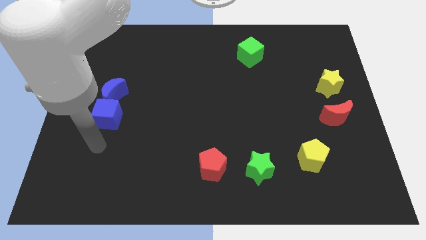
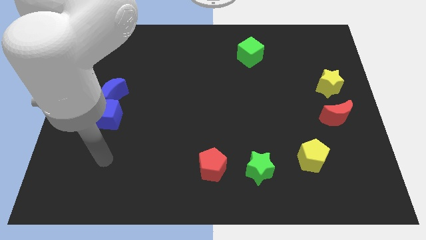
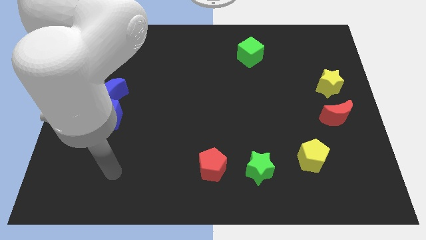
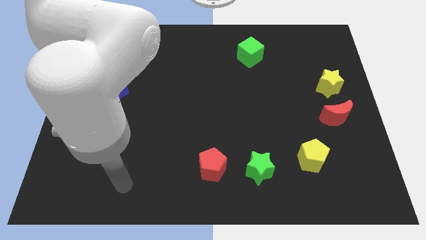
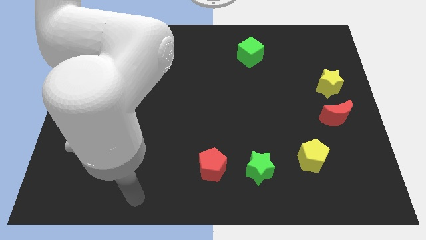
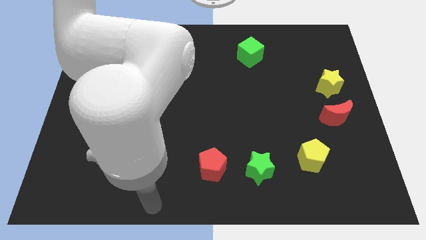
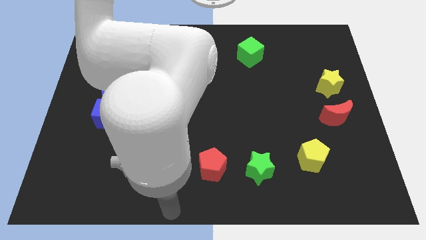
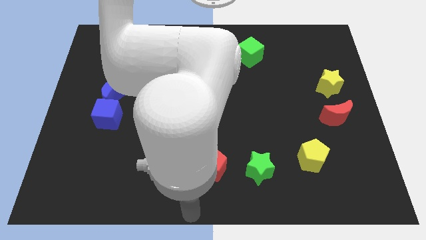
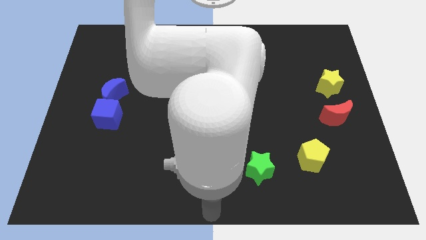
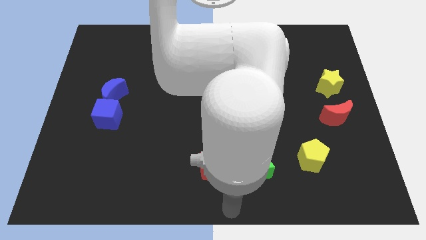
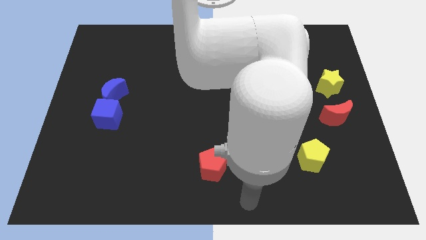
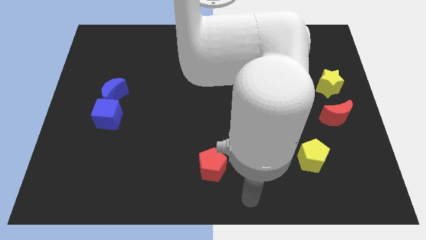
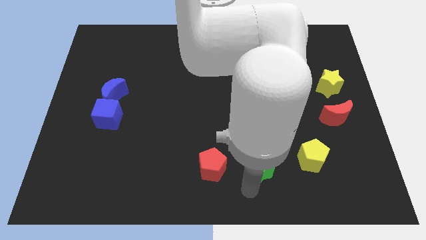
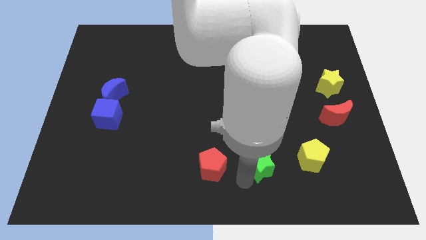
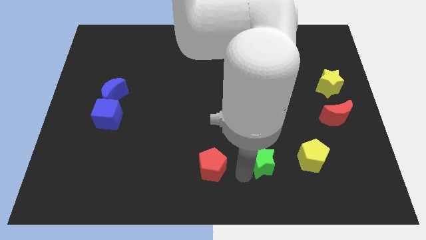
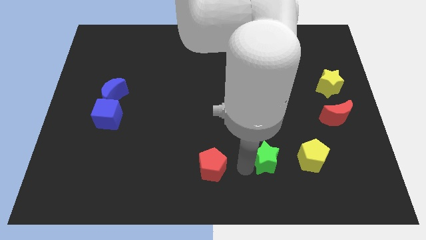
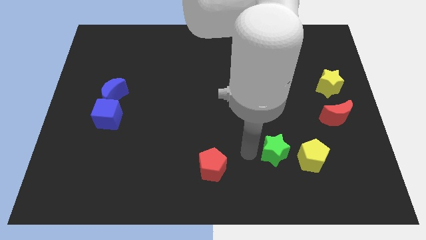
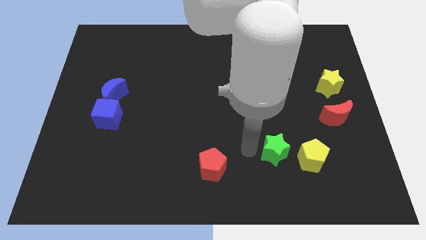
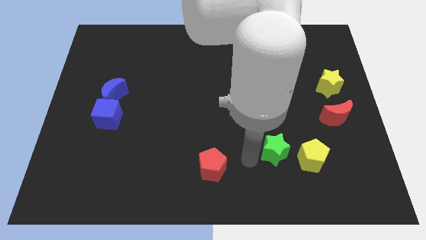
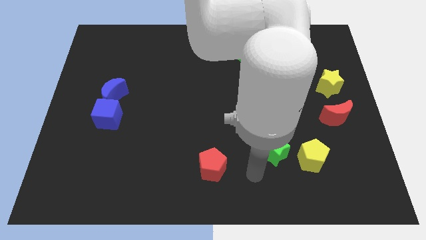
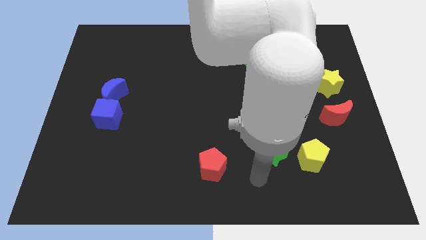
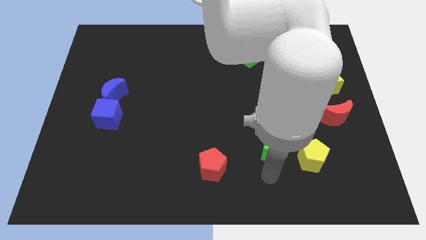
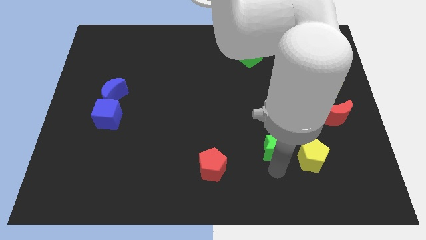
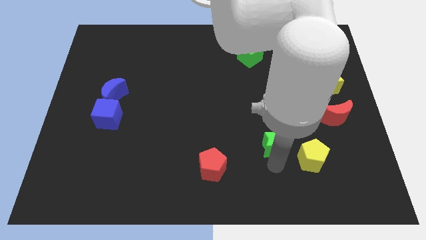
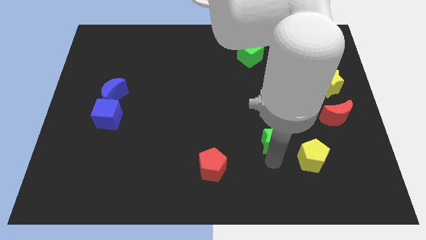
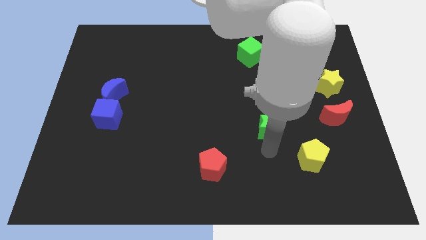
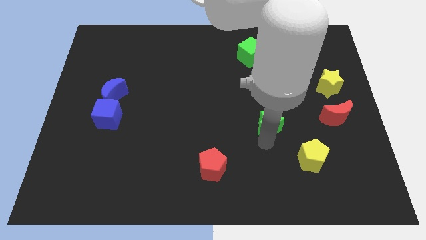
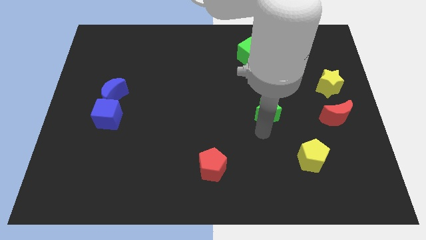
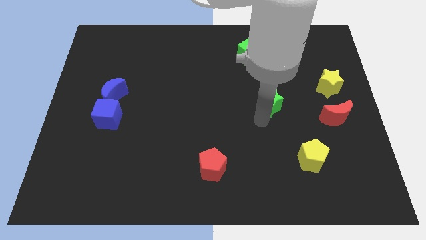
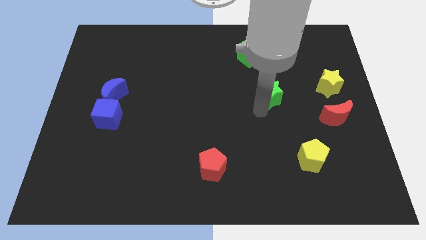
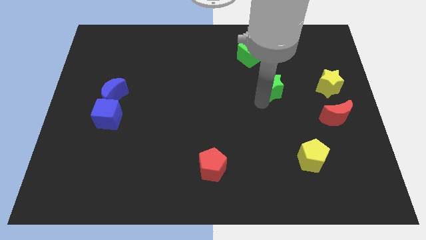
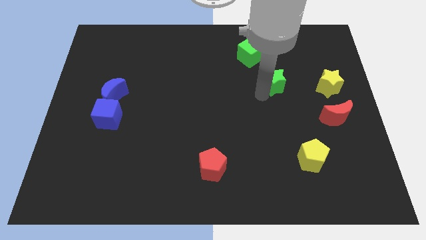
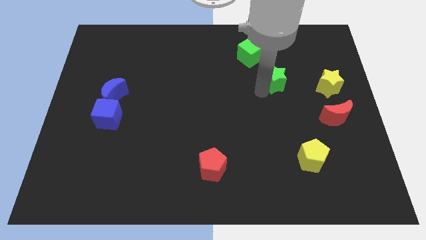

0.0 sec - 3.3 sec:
move the green star to the left of the yellow star

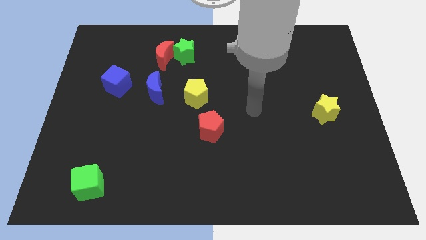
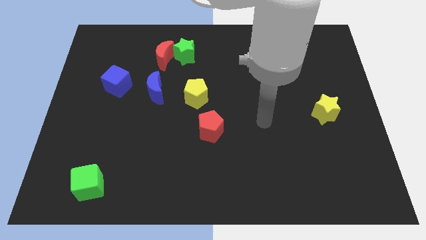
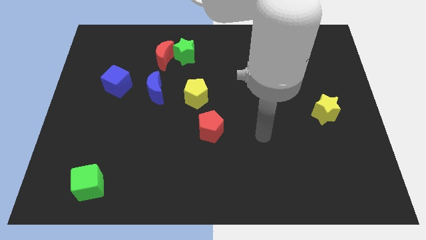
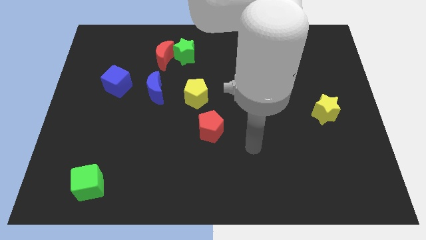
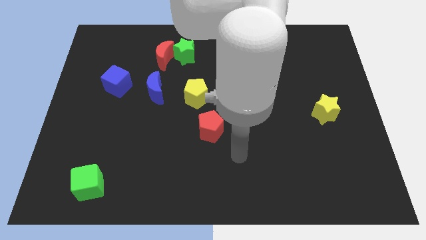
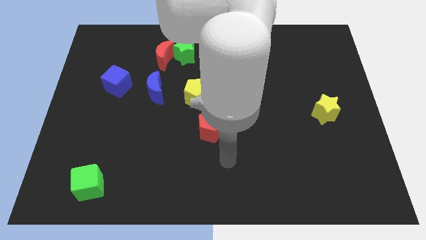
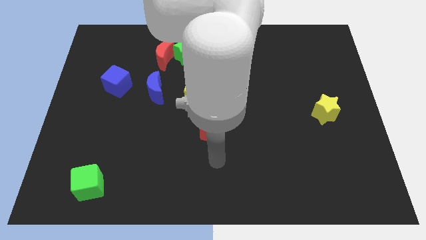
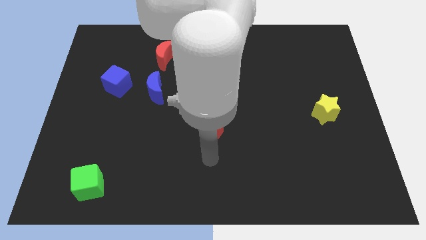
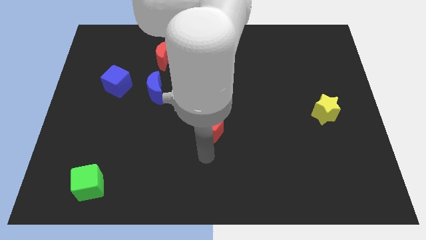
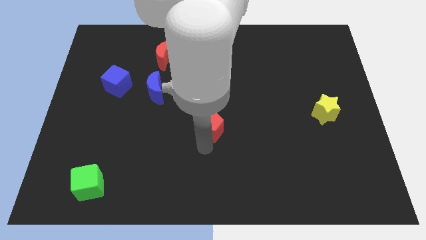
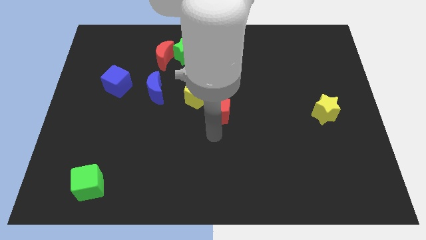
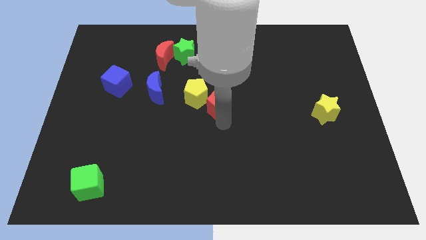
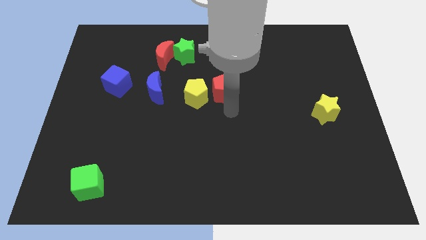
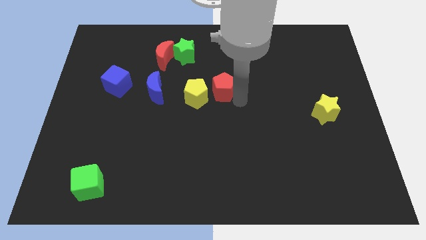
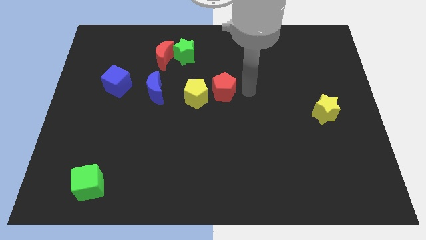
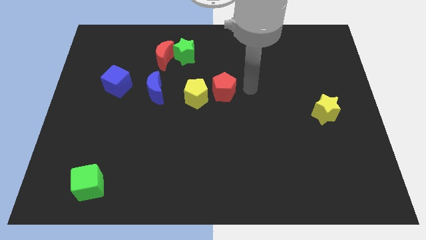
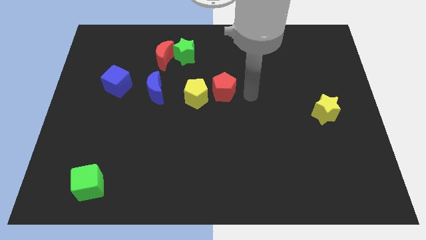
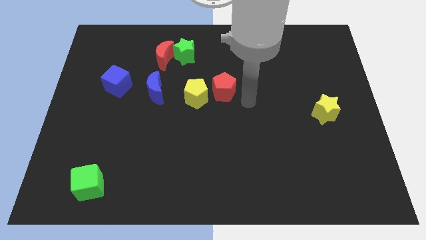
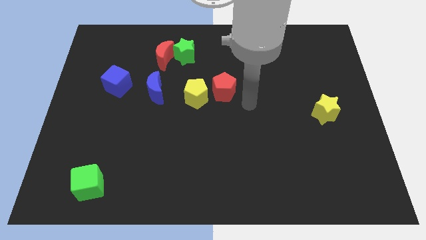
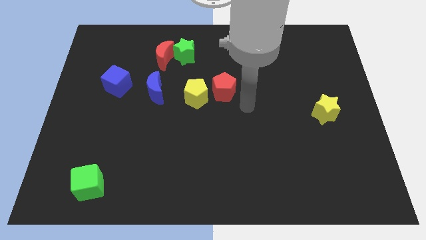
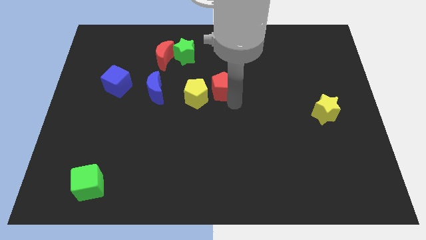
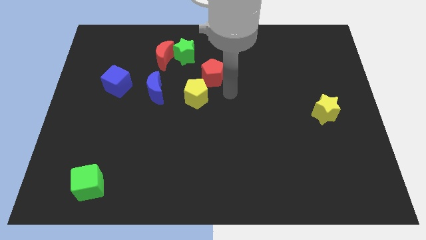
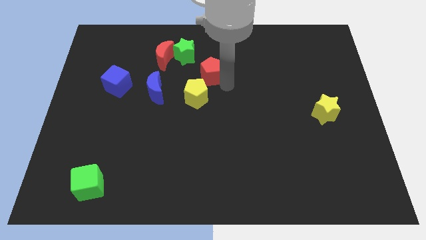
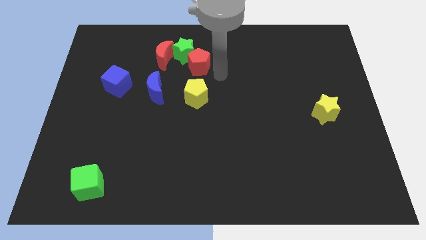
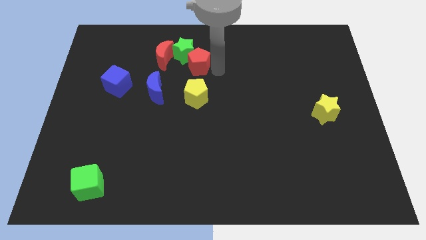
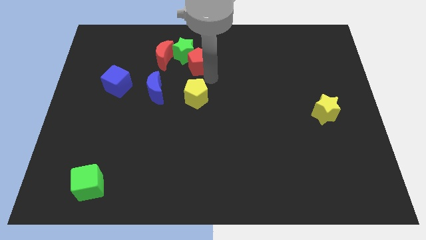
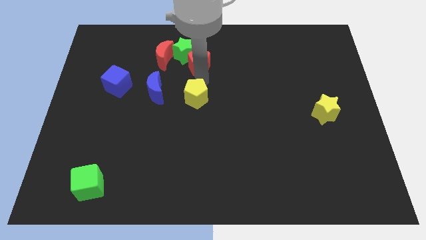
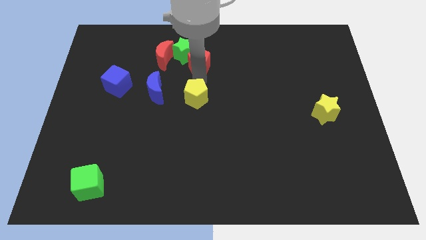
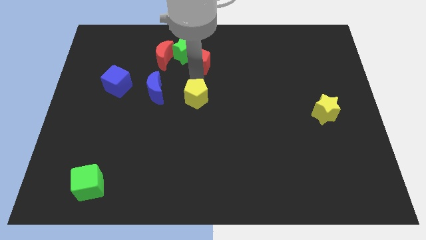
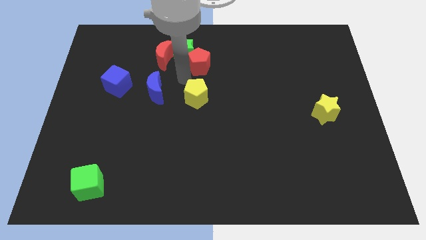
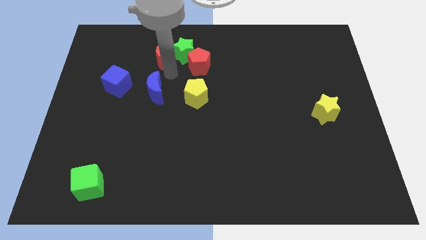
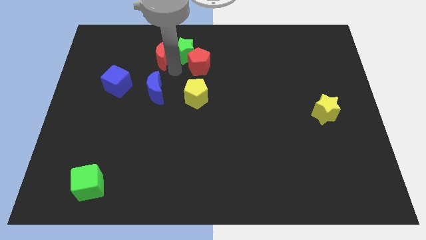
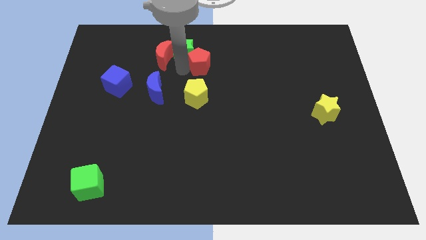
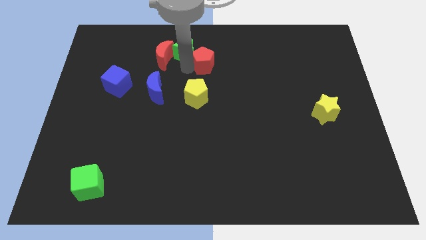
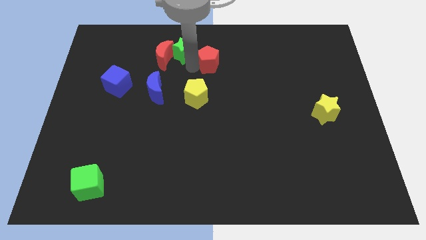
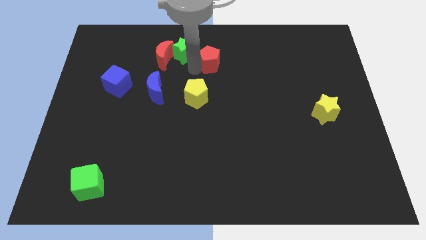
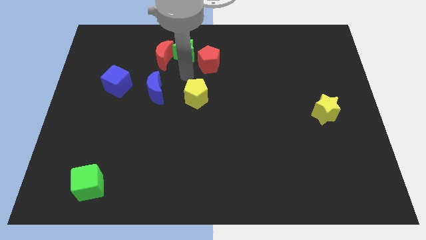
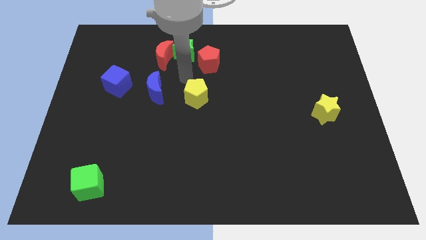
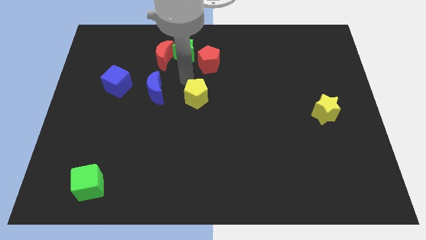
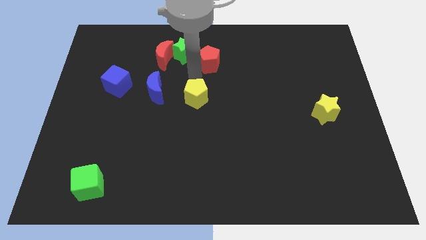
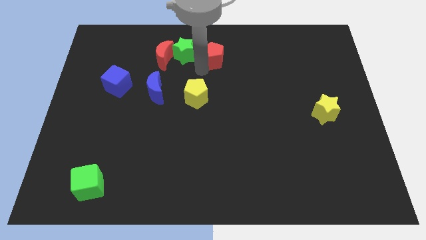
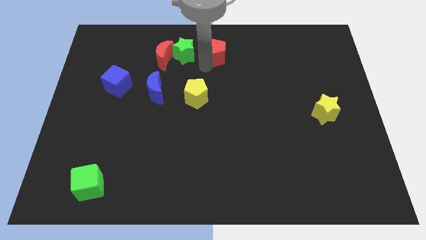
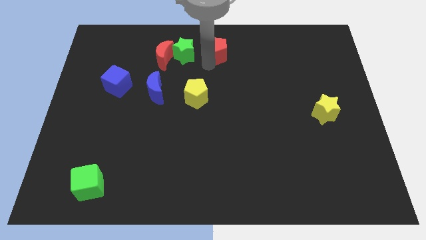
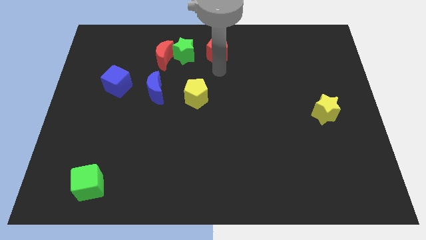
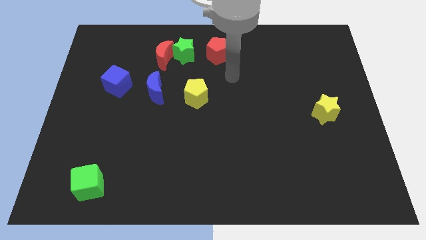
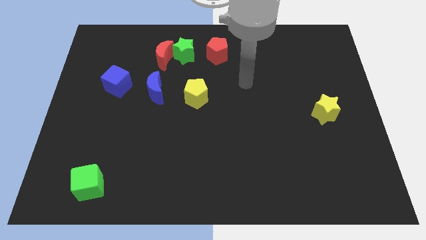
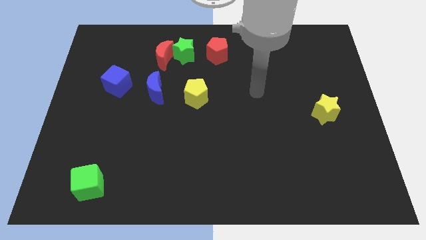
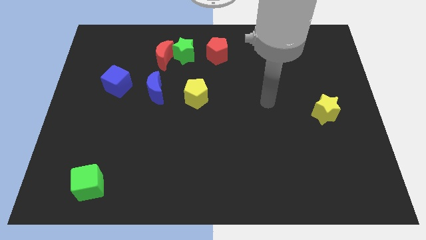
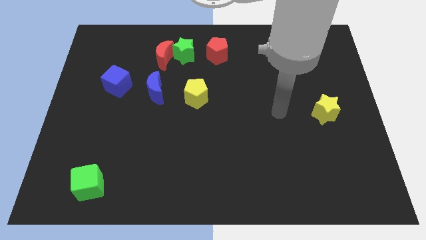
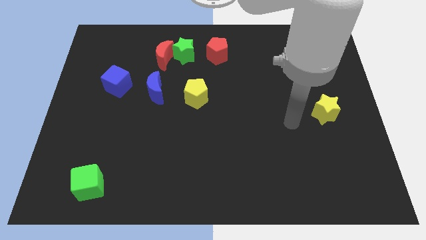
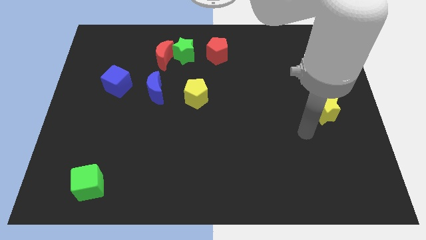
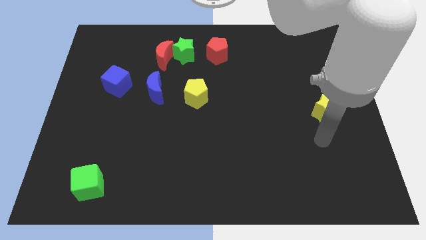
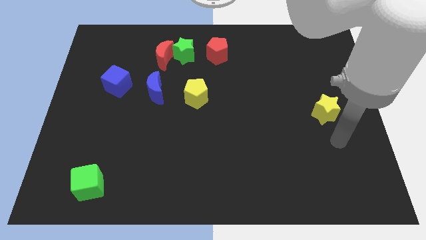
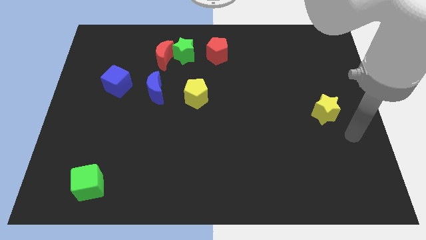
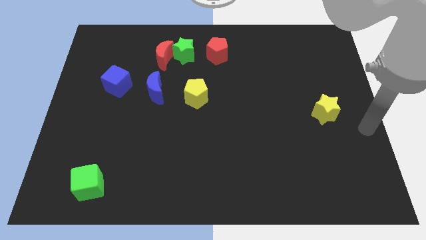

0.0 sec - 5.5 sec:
place the red pentagon to the right of the green star

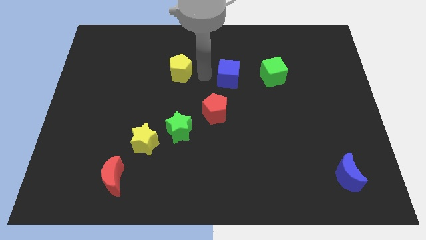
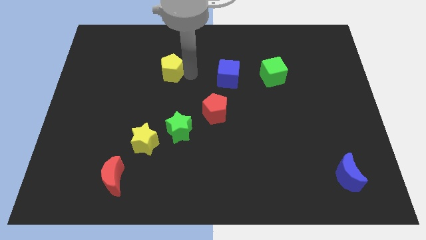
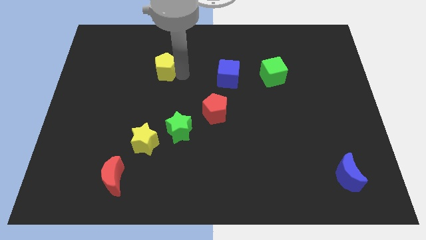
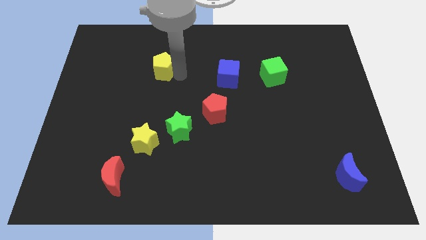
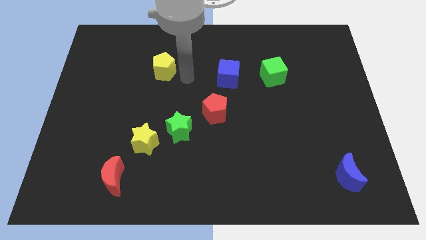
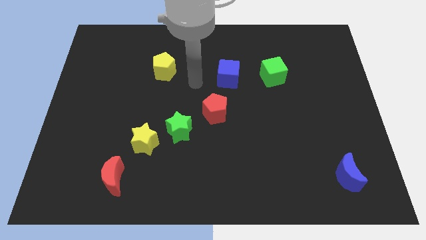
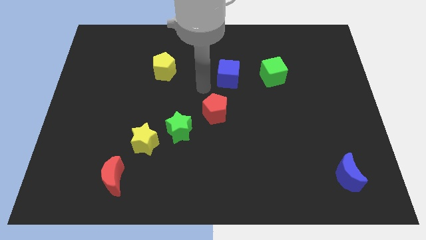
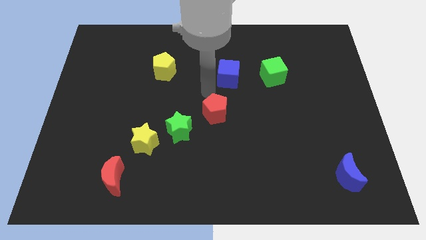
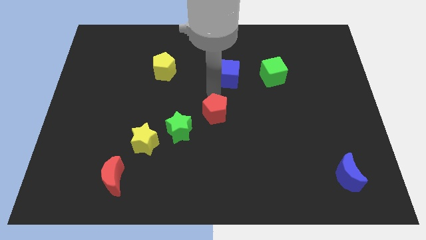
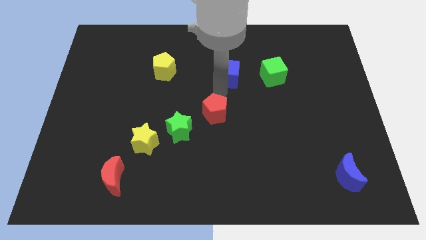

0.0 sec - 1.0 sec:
push the yellow pentagon slightly left side
